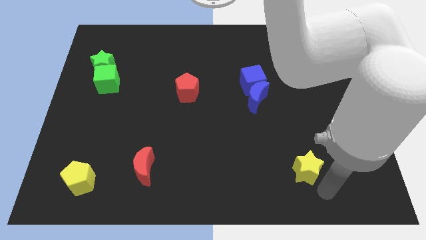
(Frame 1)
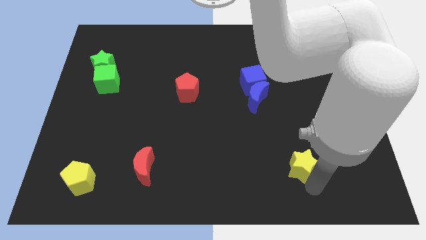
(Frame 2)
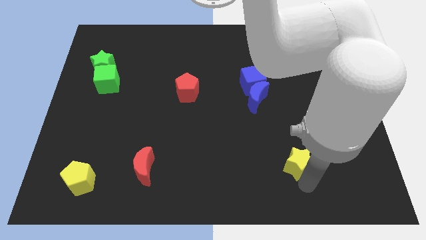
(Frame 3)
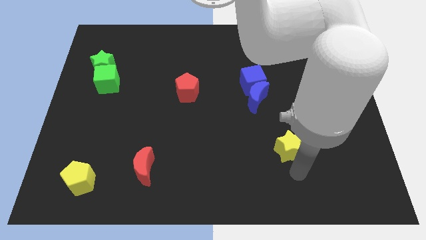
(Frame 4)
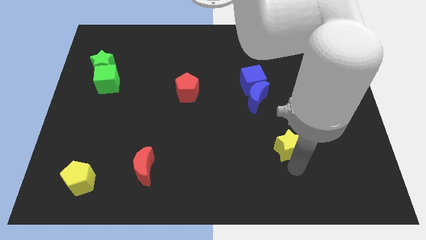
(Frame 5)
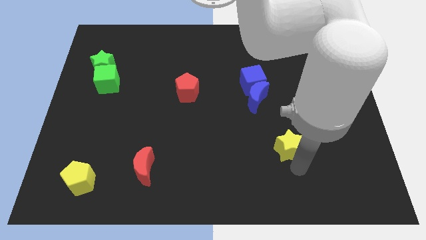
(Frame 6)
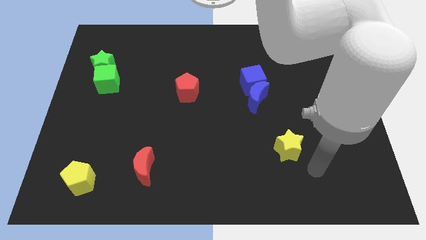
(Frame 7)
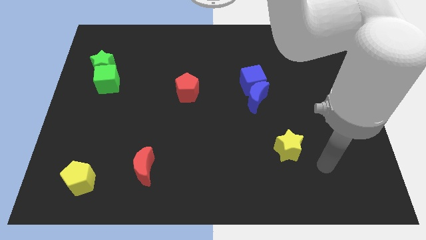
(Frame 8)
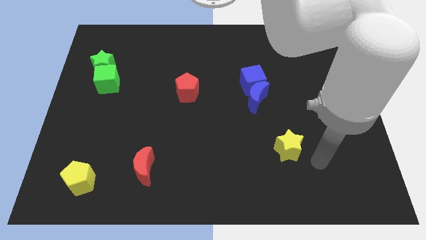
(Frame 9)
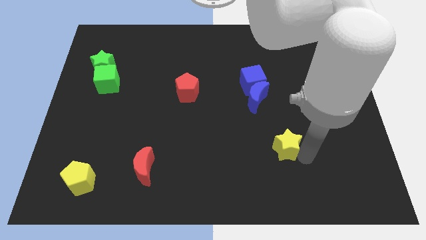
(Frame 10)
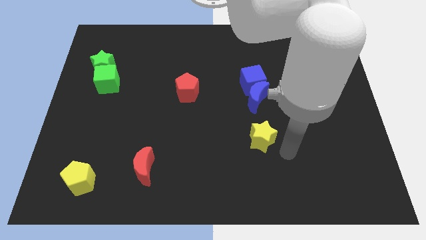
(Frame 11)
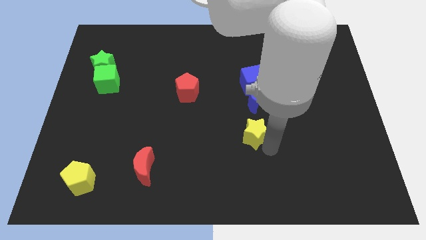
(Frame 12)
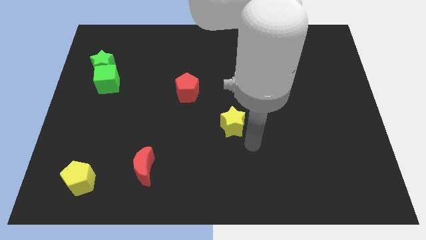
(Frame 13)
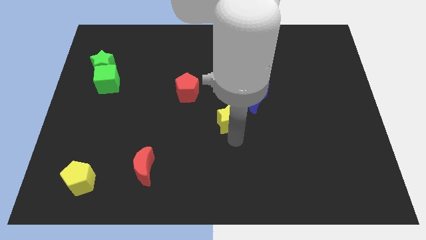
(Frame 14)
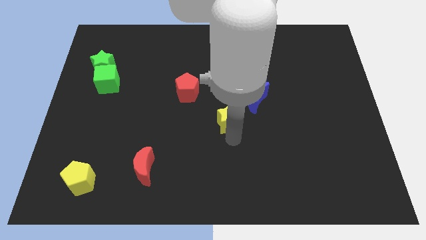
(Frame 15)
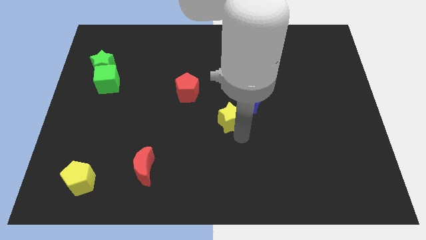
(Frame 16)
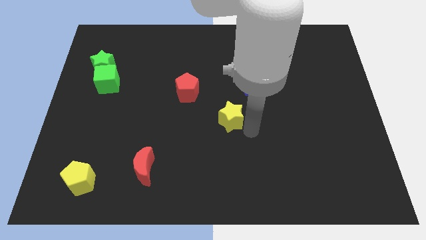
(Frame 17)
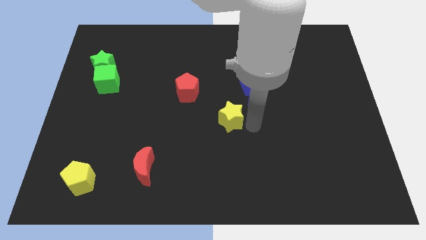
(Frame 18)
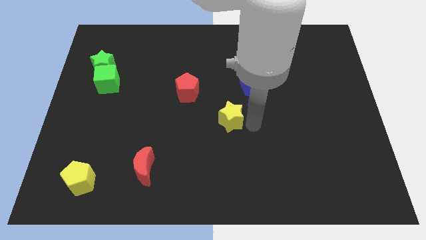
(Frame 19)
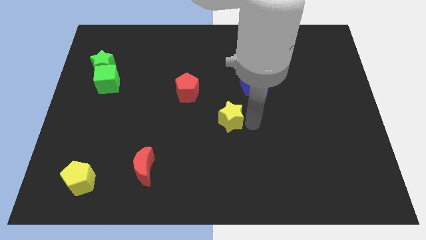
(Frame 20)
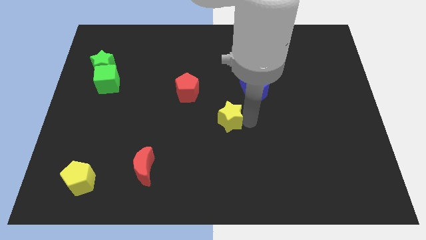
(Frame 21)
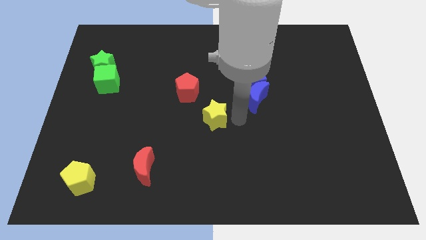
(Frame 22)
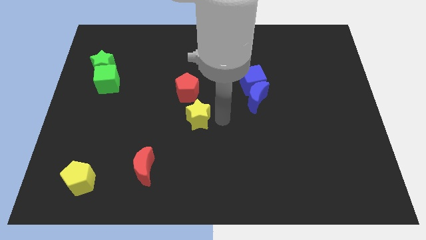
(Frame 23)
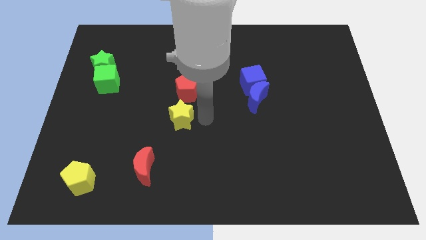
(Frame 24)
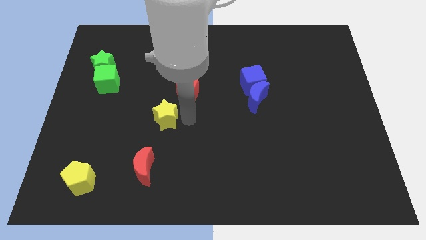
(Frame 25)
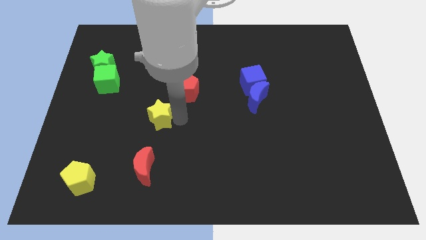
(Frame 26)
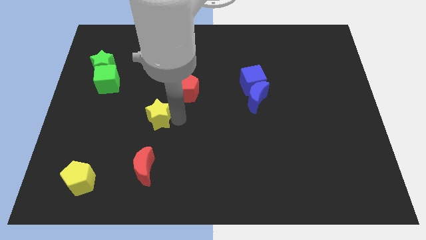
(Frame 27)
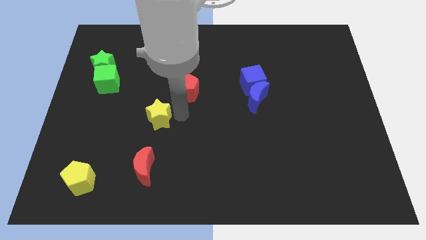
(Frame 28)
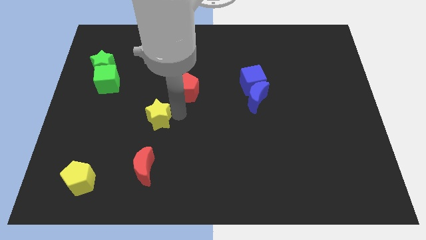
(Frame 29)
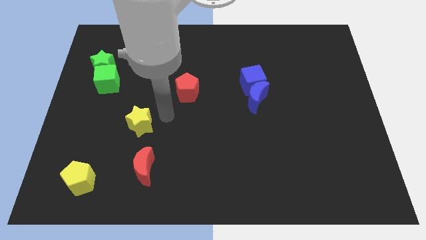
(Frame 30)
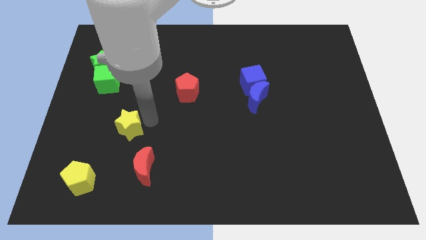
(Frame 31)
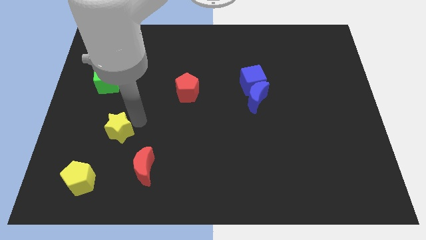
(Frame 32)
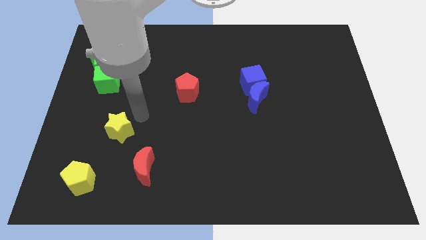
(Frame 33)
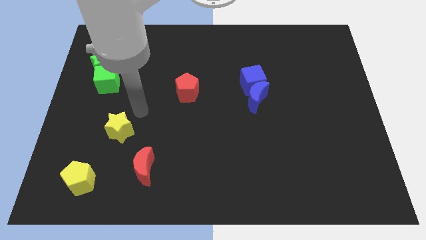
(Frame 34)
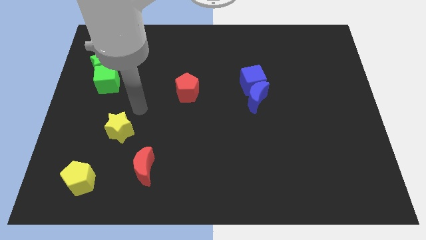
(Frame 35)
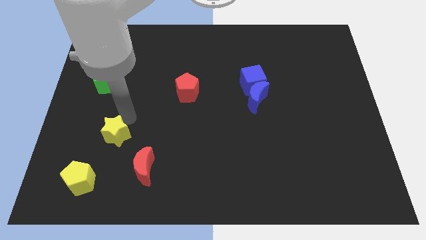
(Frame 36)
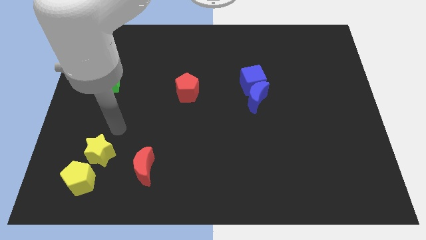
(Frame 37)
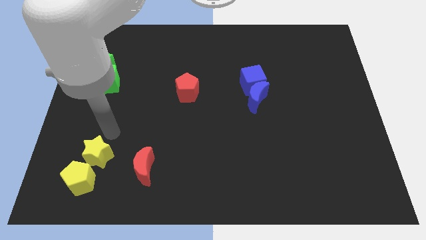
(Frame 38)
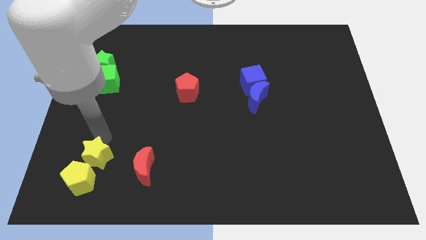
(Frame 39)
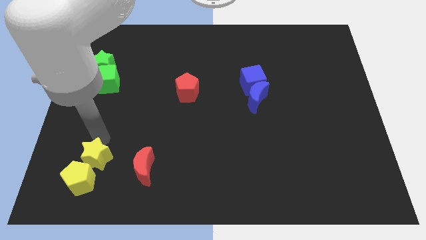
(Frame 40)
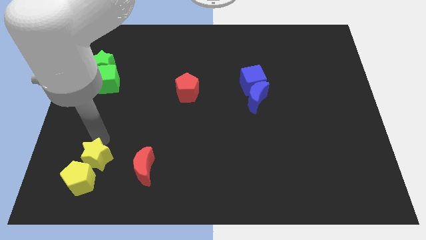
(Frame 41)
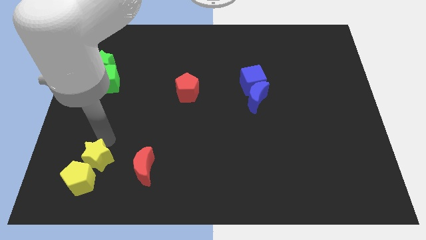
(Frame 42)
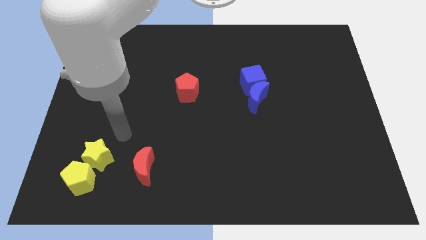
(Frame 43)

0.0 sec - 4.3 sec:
move the yellow star on top into yellow pentagon

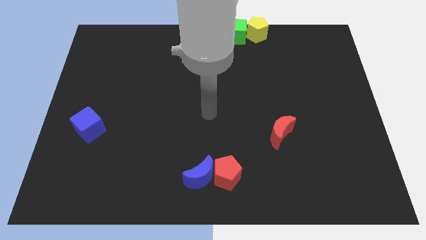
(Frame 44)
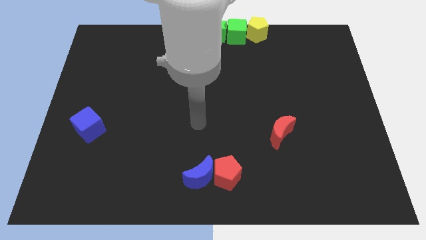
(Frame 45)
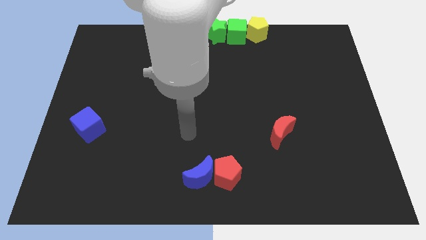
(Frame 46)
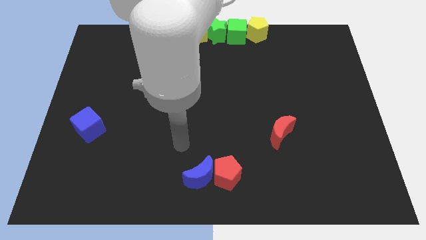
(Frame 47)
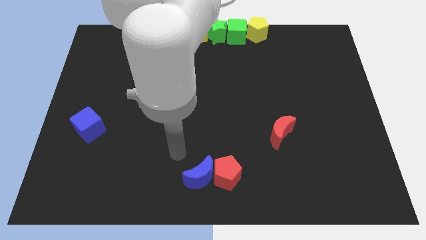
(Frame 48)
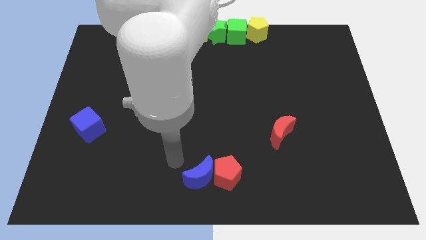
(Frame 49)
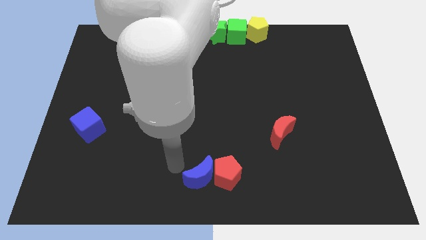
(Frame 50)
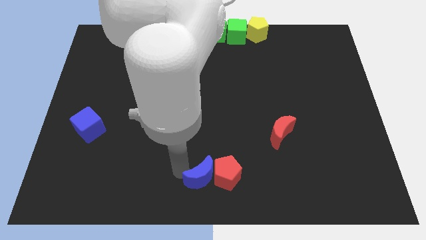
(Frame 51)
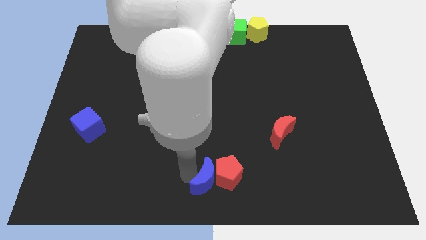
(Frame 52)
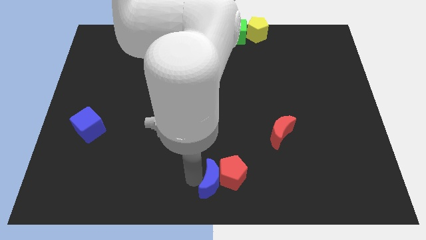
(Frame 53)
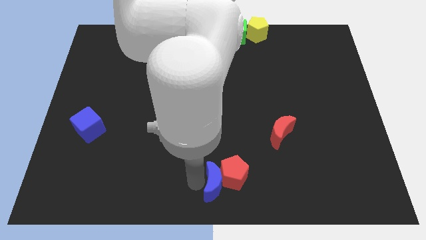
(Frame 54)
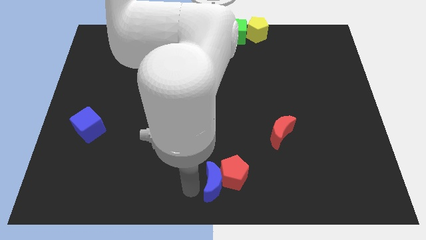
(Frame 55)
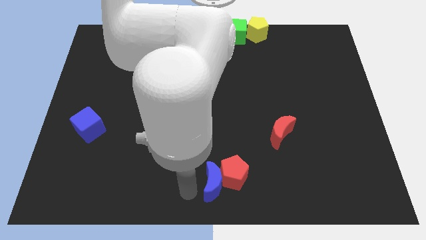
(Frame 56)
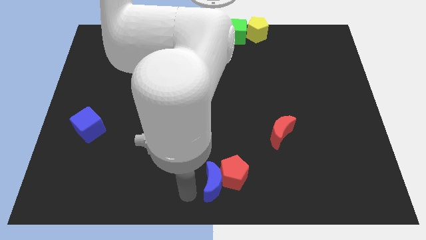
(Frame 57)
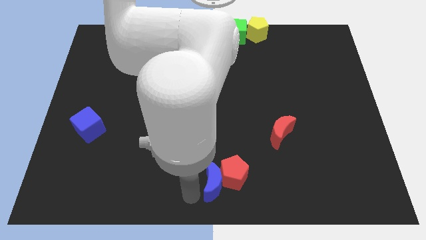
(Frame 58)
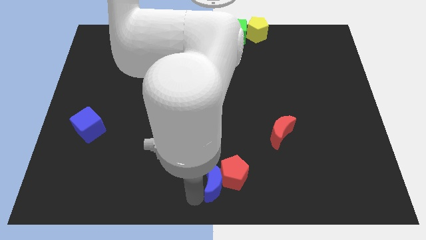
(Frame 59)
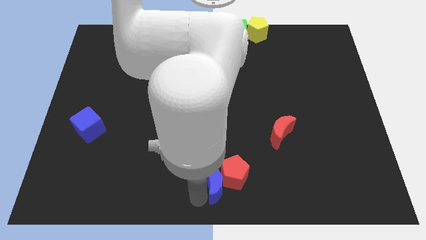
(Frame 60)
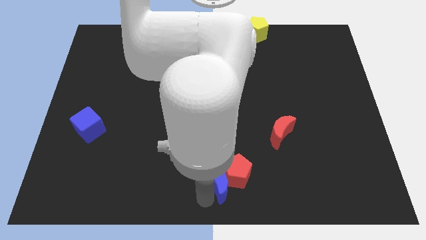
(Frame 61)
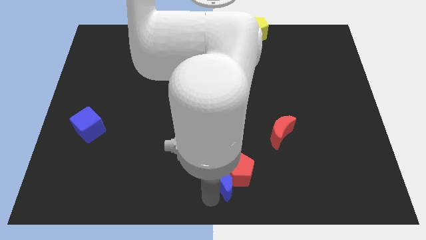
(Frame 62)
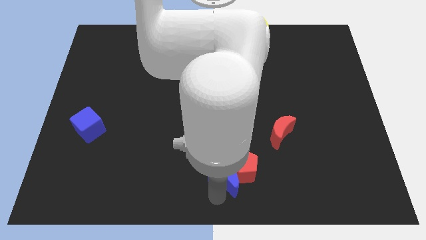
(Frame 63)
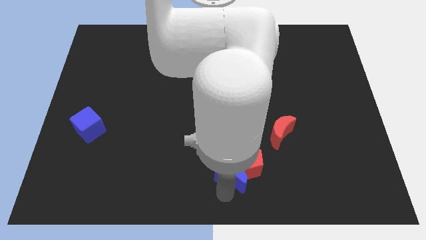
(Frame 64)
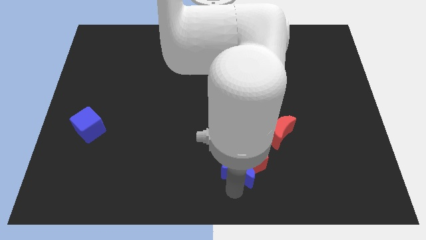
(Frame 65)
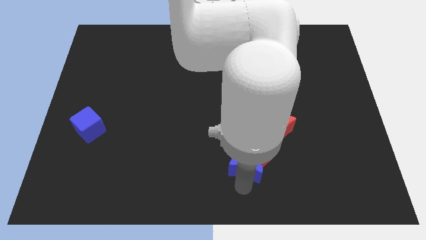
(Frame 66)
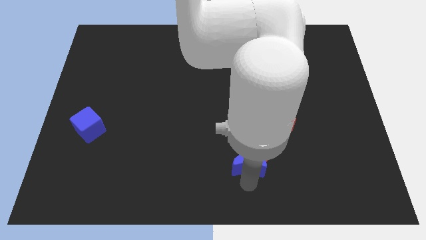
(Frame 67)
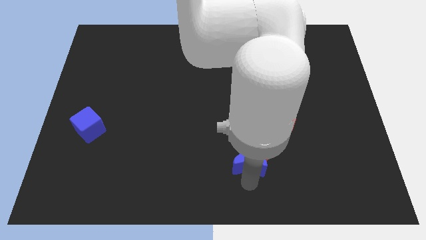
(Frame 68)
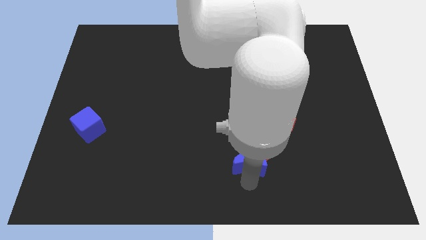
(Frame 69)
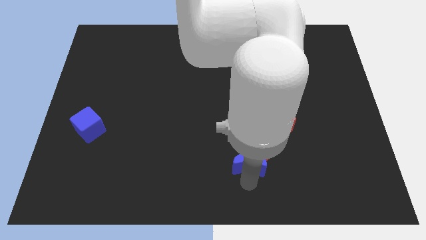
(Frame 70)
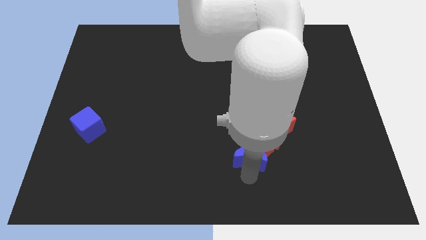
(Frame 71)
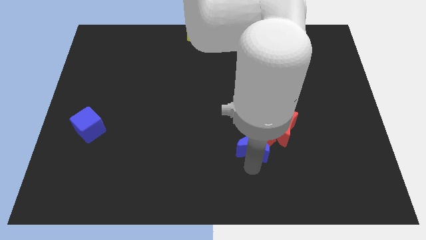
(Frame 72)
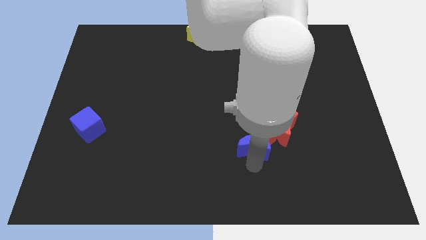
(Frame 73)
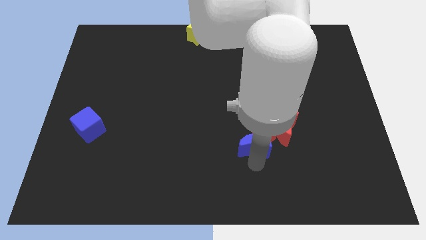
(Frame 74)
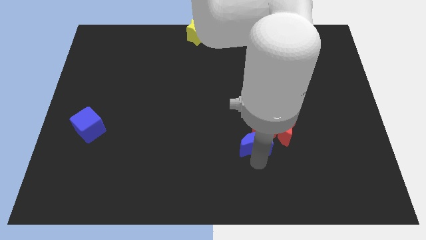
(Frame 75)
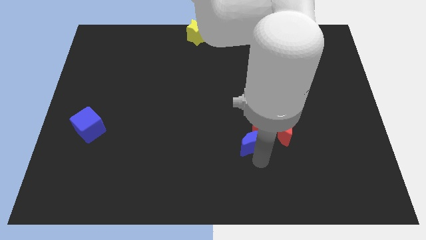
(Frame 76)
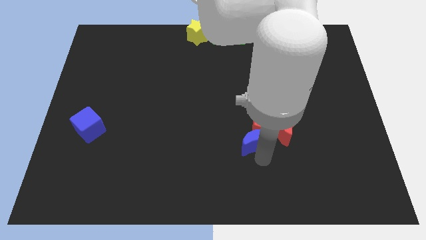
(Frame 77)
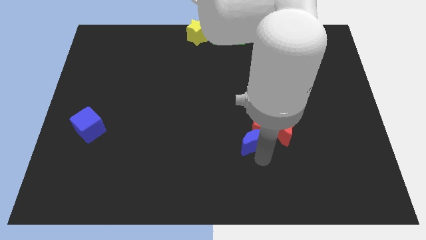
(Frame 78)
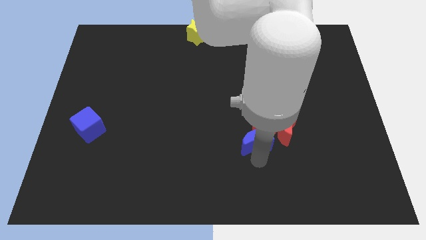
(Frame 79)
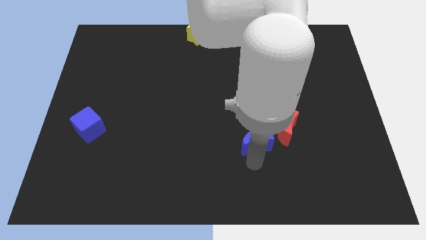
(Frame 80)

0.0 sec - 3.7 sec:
move the red crescent red pentagon along with the blue crescent to the center

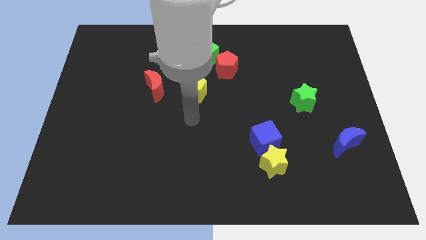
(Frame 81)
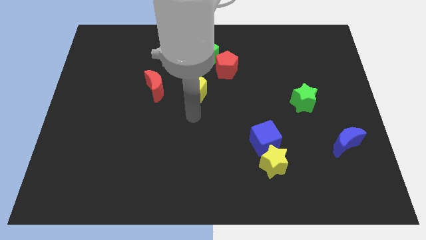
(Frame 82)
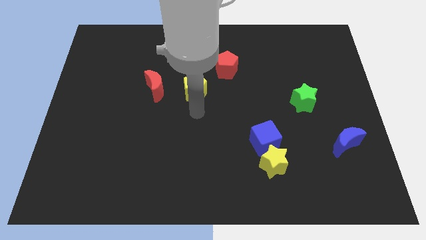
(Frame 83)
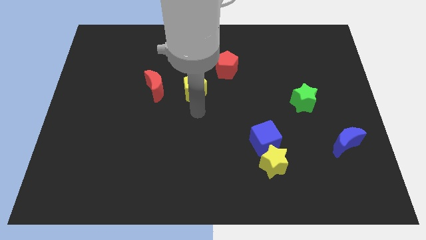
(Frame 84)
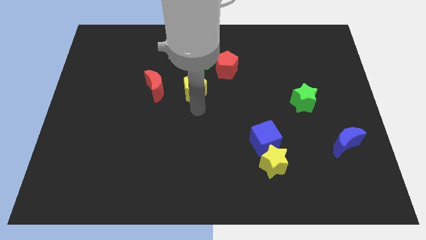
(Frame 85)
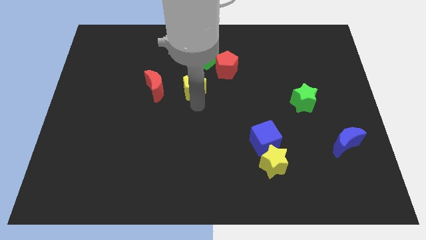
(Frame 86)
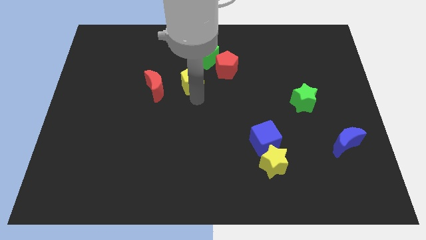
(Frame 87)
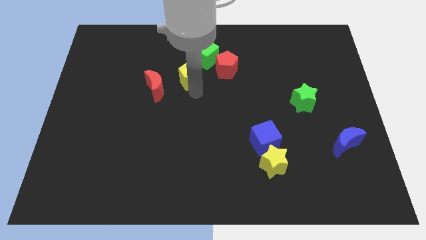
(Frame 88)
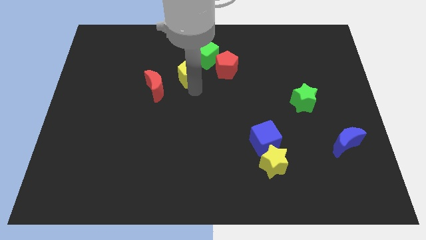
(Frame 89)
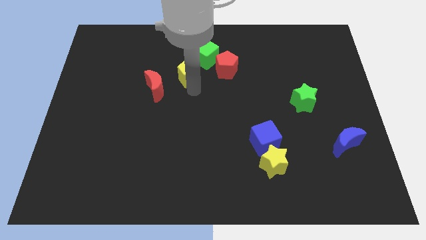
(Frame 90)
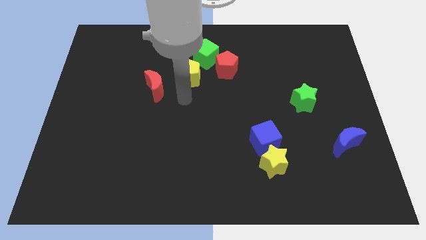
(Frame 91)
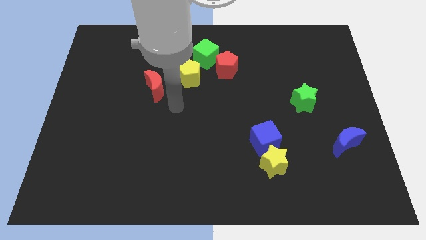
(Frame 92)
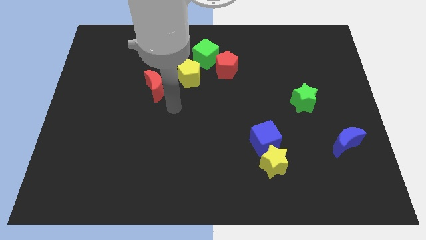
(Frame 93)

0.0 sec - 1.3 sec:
push the yellow pentagon diagonal to the green cube
